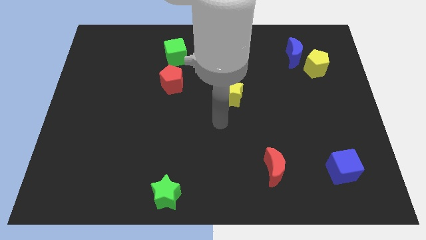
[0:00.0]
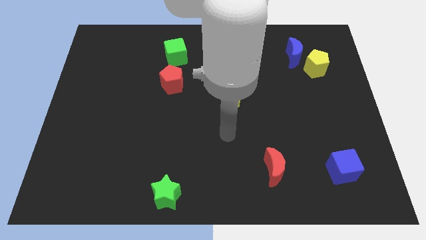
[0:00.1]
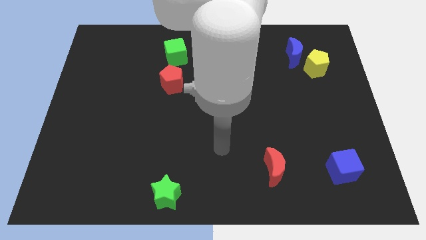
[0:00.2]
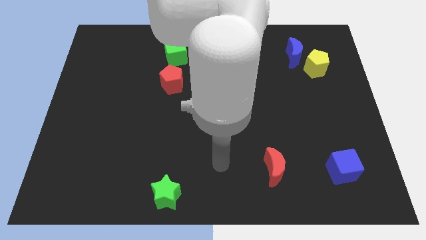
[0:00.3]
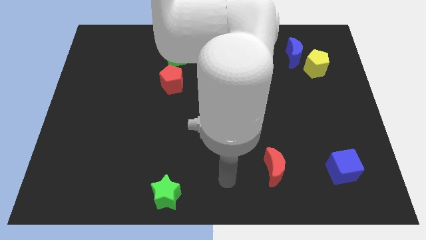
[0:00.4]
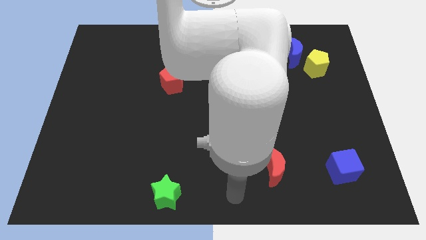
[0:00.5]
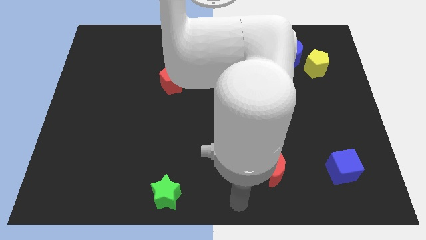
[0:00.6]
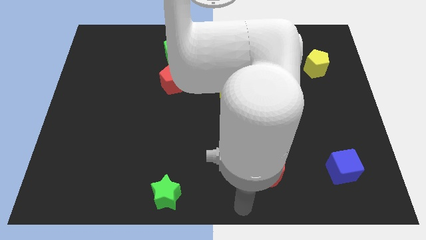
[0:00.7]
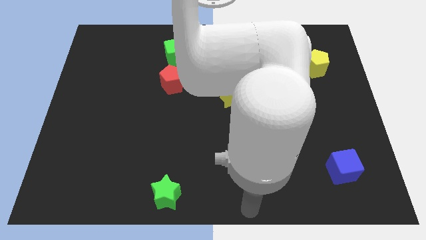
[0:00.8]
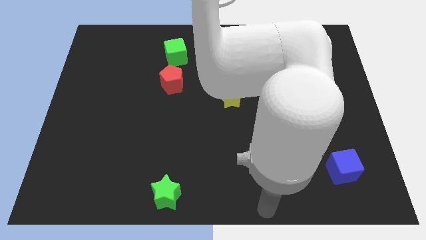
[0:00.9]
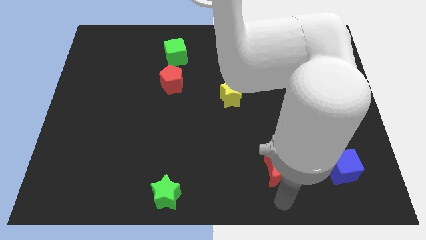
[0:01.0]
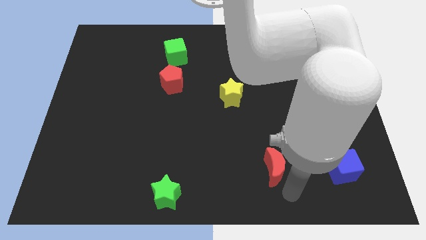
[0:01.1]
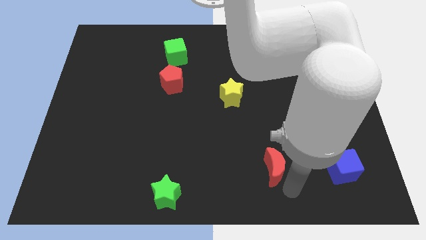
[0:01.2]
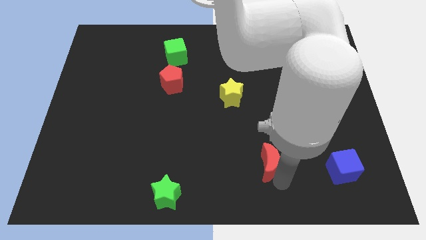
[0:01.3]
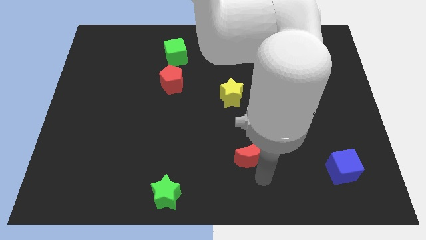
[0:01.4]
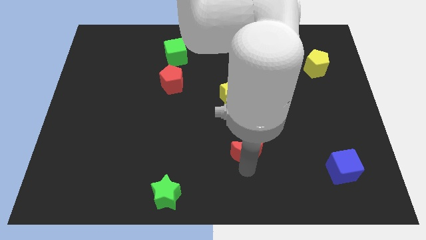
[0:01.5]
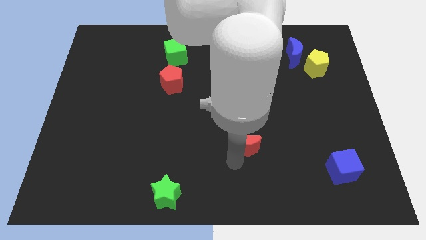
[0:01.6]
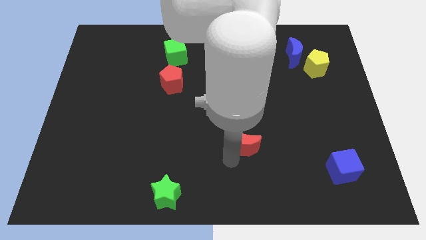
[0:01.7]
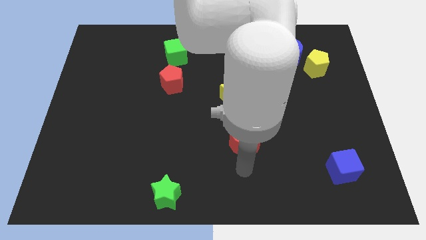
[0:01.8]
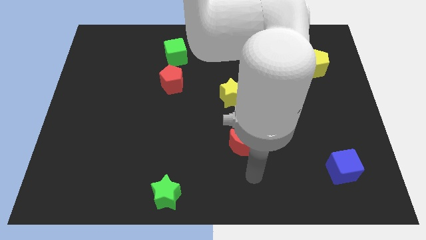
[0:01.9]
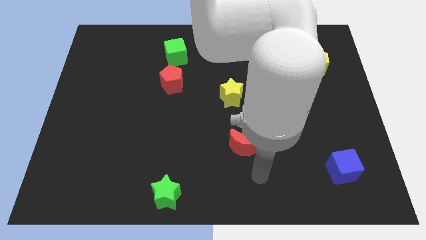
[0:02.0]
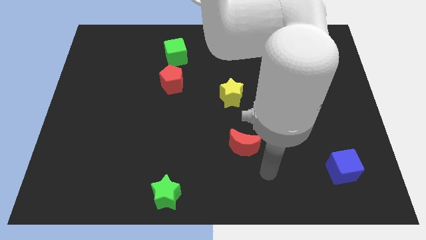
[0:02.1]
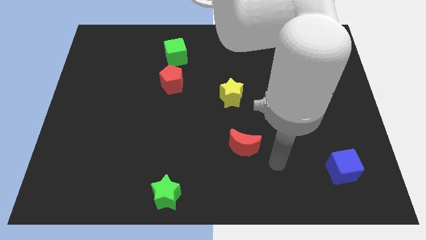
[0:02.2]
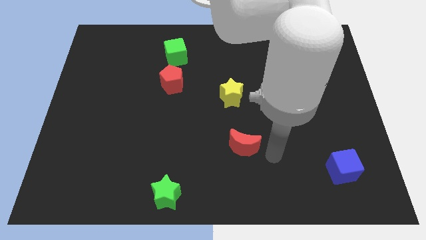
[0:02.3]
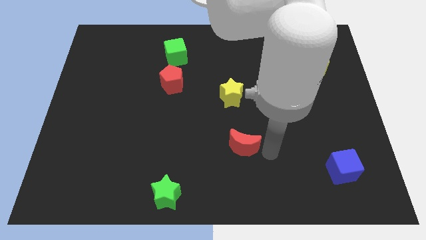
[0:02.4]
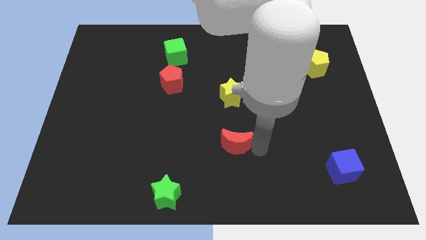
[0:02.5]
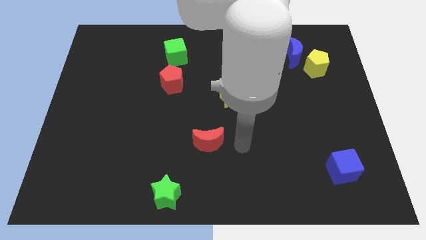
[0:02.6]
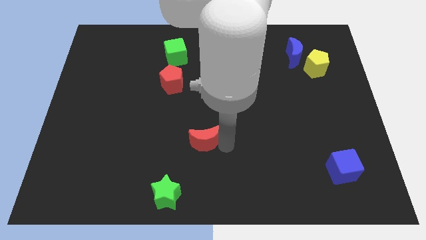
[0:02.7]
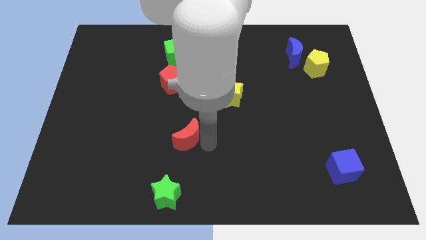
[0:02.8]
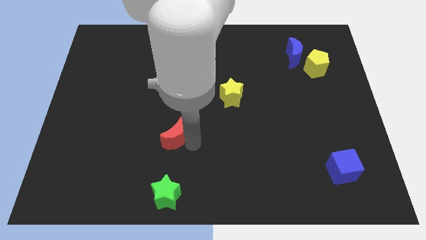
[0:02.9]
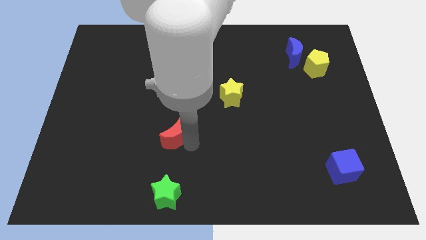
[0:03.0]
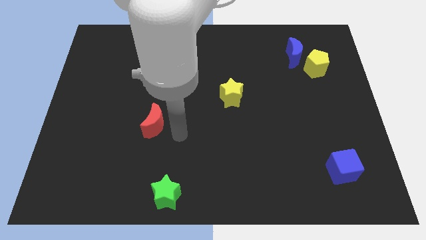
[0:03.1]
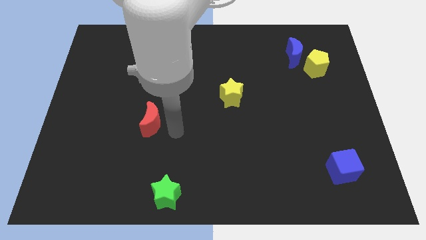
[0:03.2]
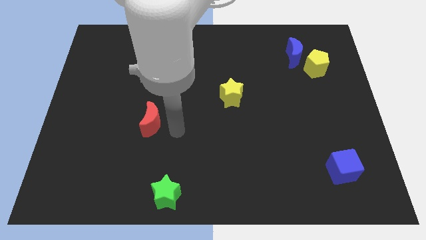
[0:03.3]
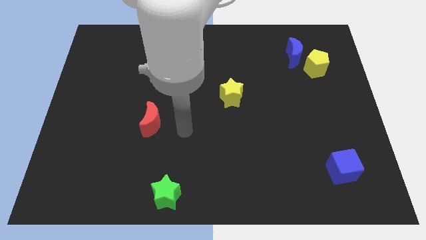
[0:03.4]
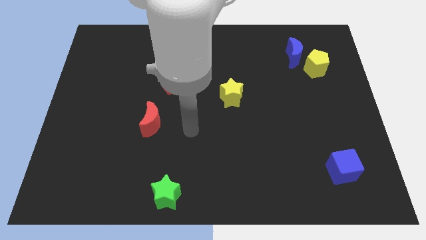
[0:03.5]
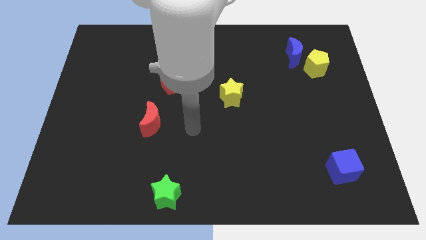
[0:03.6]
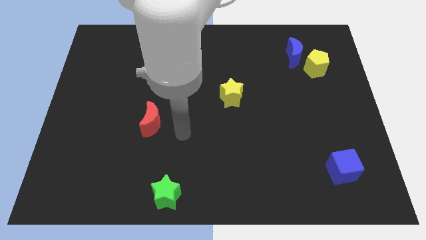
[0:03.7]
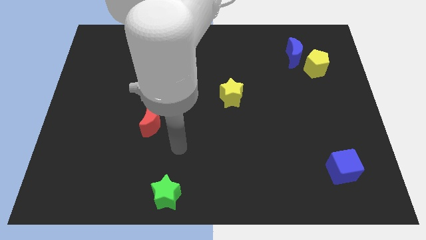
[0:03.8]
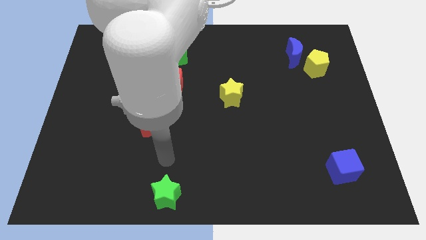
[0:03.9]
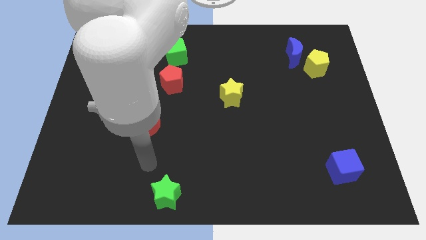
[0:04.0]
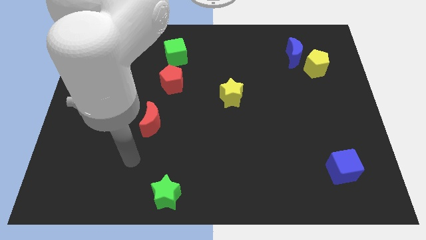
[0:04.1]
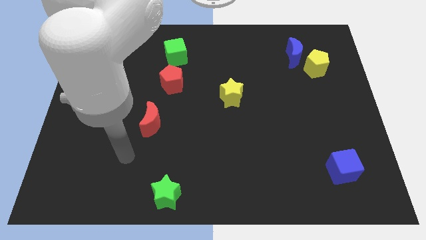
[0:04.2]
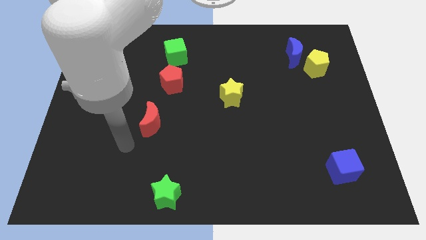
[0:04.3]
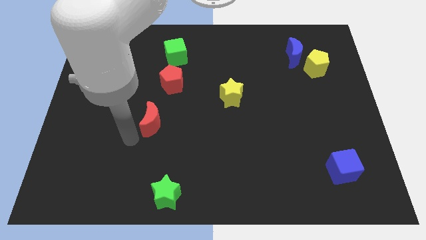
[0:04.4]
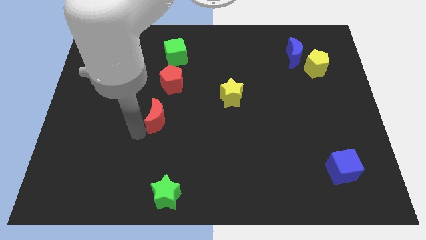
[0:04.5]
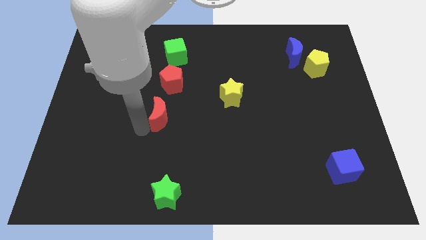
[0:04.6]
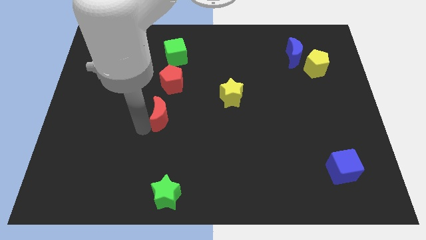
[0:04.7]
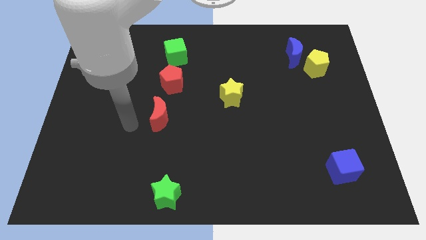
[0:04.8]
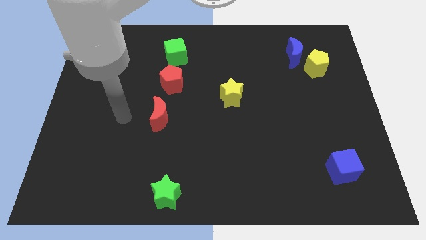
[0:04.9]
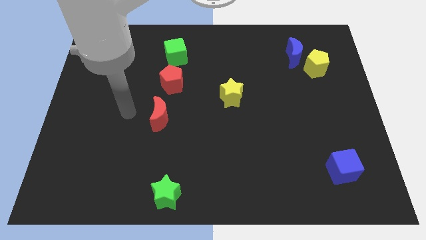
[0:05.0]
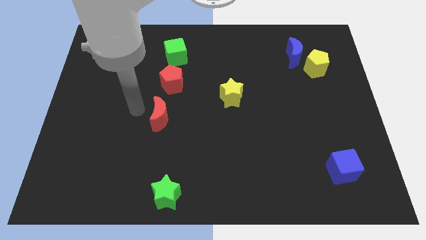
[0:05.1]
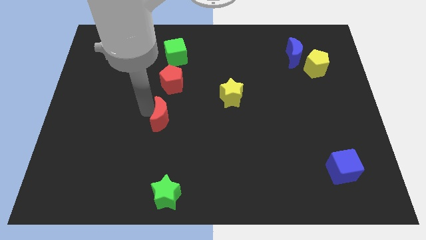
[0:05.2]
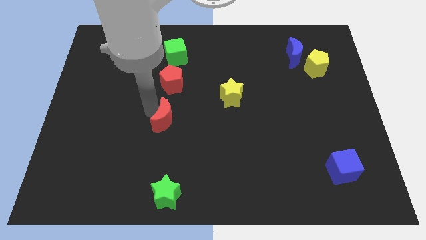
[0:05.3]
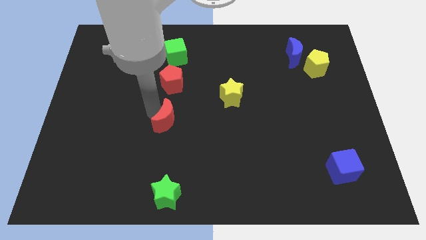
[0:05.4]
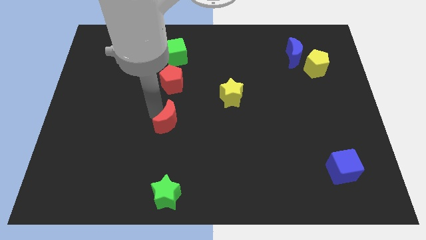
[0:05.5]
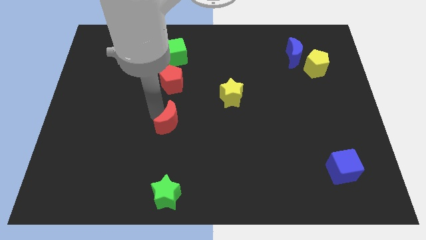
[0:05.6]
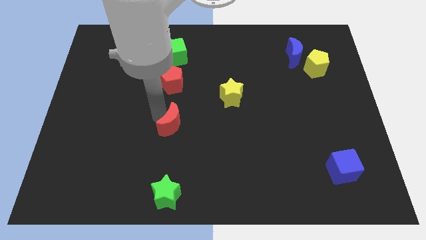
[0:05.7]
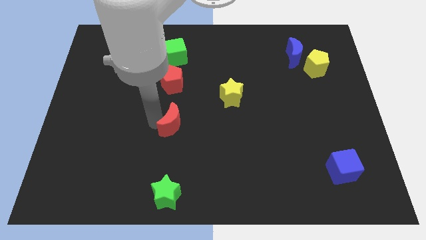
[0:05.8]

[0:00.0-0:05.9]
put the red crescent below the red pentagon

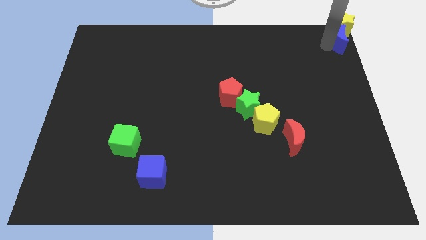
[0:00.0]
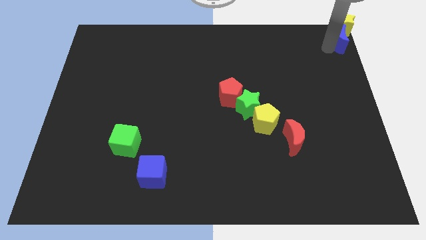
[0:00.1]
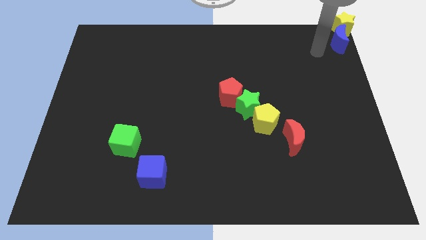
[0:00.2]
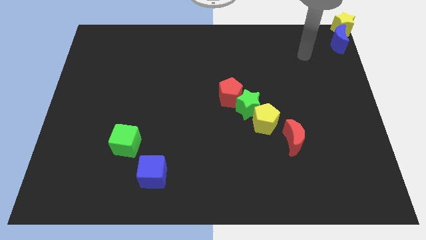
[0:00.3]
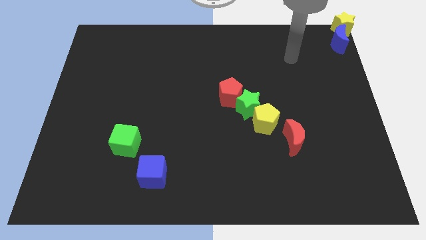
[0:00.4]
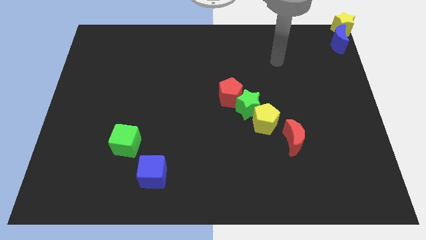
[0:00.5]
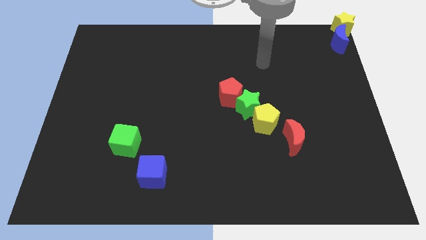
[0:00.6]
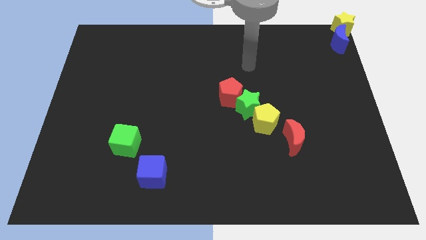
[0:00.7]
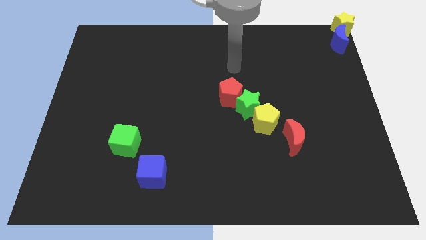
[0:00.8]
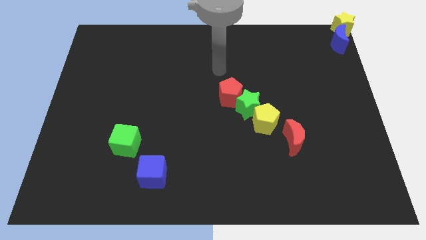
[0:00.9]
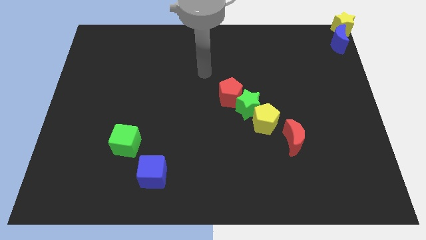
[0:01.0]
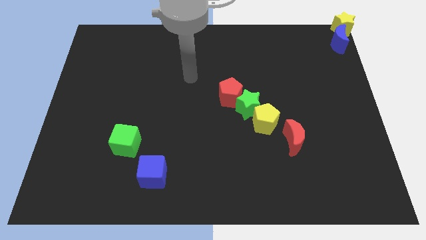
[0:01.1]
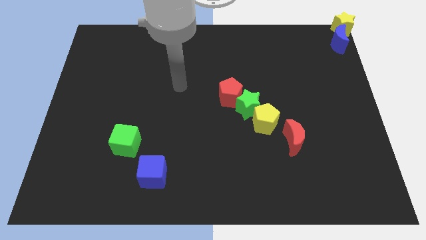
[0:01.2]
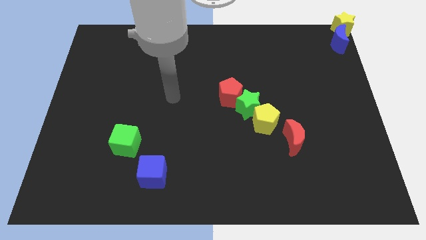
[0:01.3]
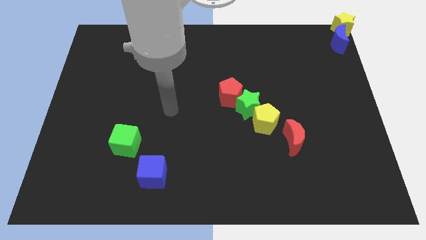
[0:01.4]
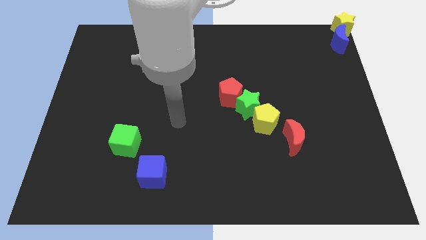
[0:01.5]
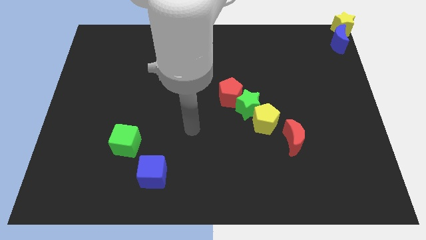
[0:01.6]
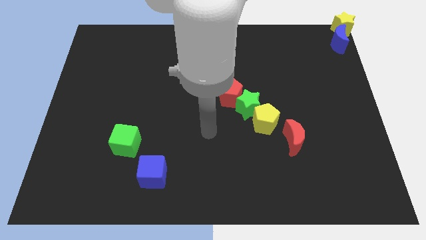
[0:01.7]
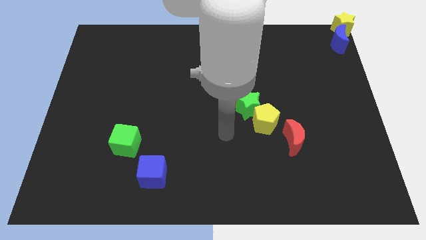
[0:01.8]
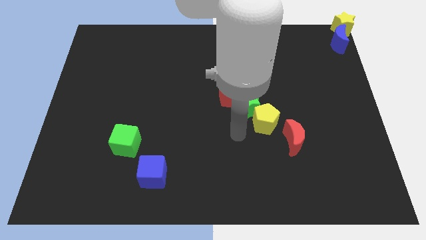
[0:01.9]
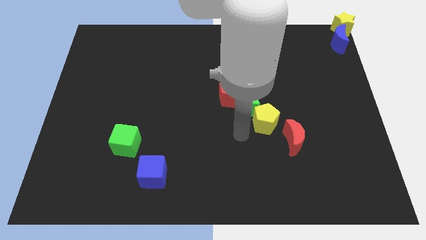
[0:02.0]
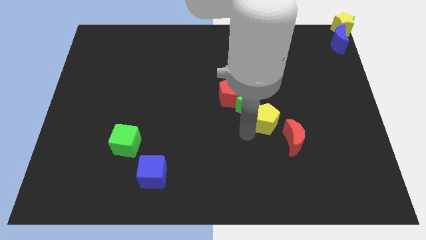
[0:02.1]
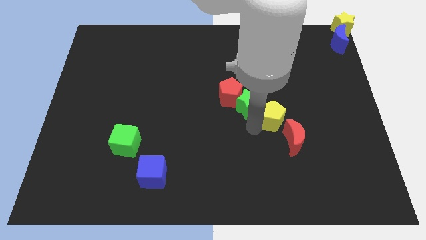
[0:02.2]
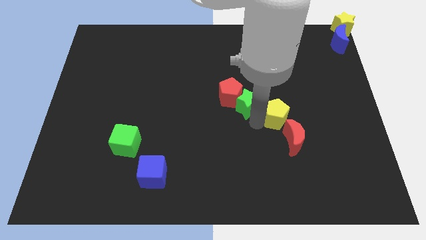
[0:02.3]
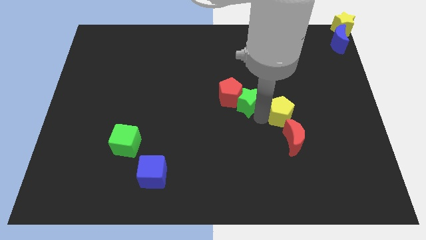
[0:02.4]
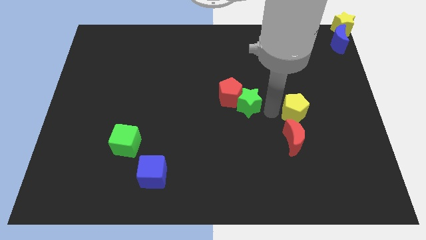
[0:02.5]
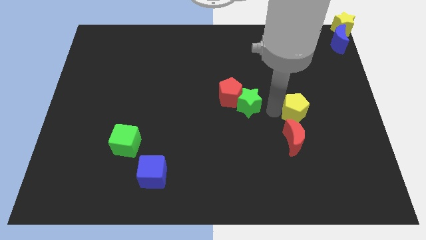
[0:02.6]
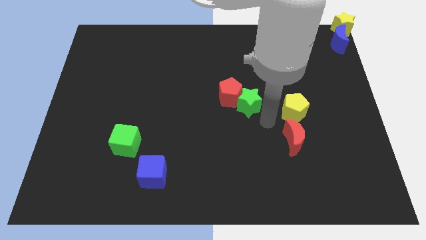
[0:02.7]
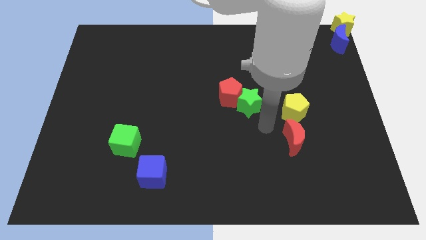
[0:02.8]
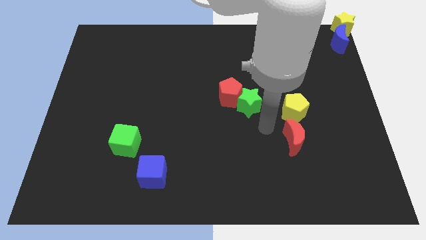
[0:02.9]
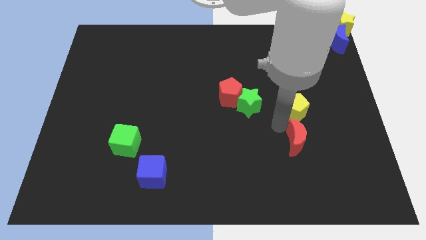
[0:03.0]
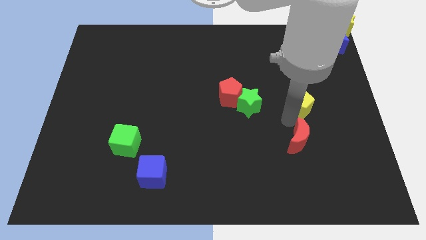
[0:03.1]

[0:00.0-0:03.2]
move the yellow pentagon parallel to the top of the red crescent
